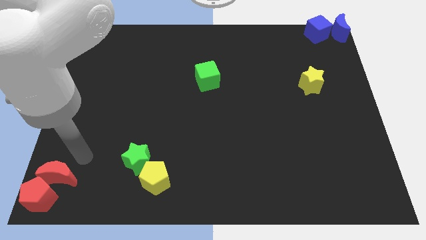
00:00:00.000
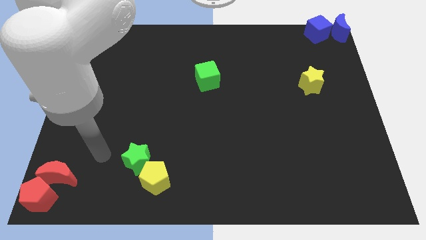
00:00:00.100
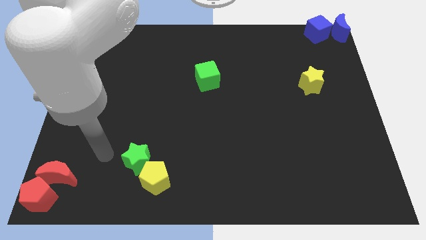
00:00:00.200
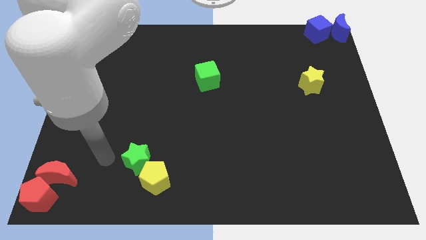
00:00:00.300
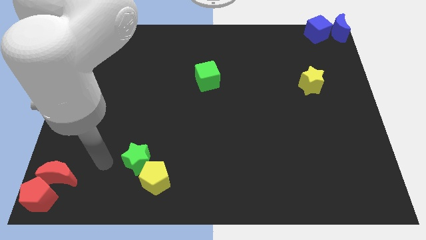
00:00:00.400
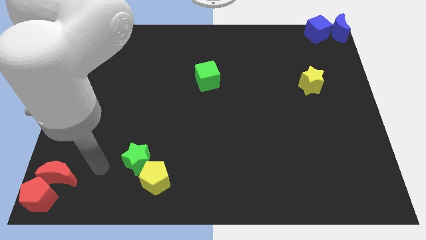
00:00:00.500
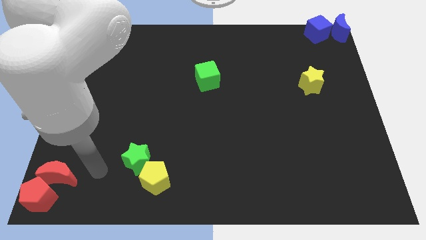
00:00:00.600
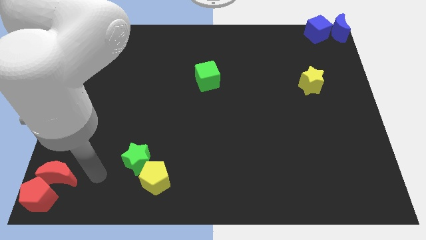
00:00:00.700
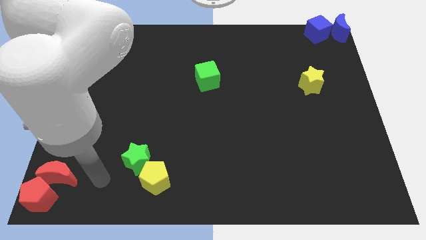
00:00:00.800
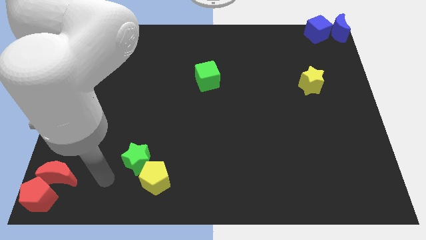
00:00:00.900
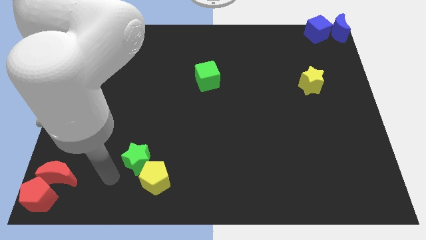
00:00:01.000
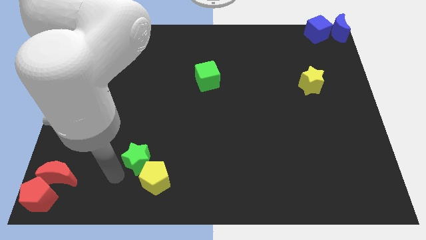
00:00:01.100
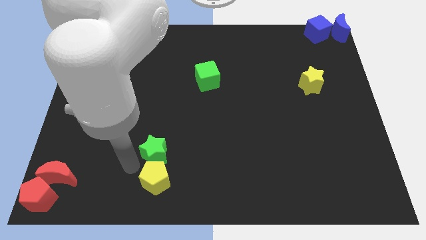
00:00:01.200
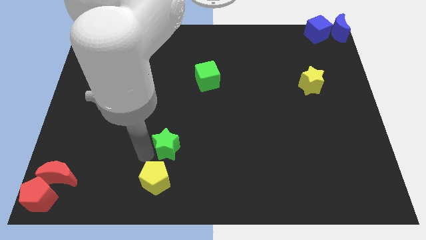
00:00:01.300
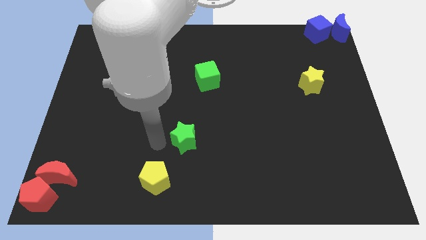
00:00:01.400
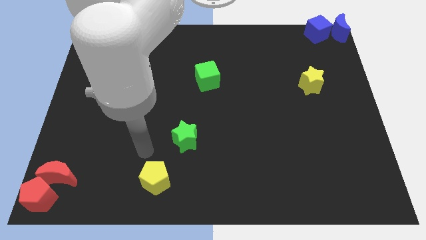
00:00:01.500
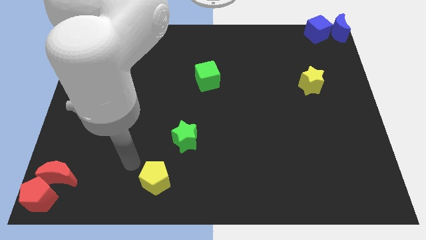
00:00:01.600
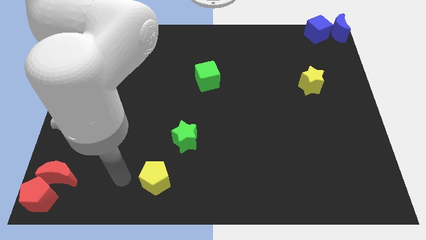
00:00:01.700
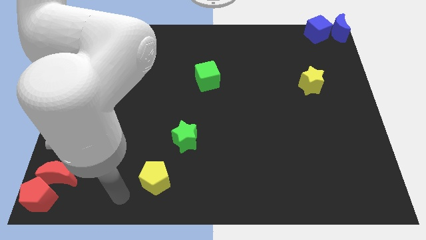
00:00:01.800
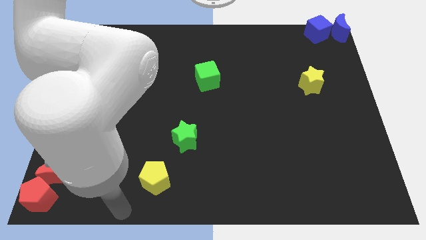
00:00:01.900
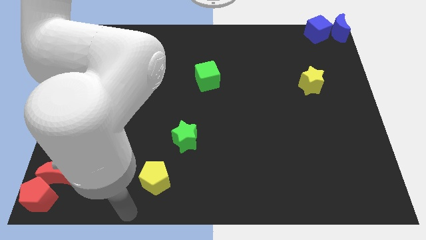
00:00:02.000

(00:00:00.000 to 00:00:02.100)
separate green star and yellow pentagon

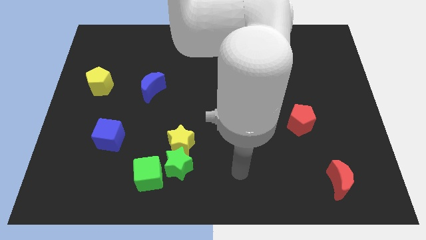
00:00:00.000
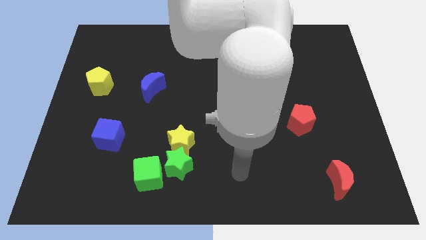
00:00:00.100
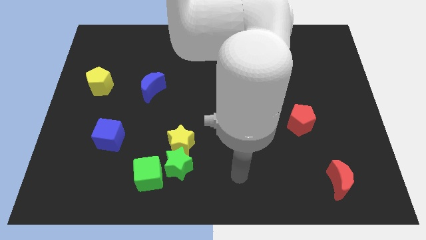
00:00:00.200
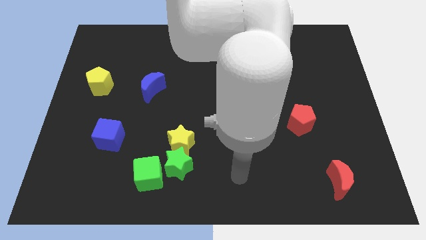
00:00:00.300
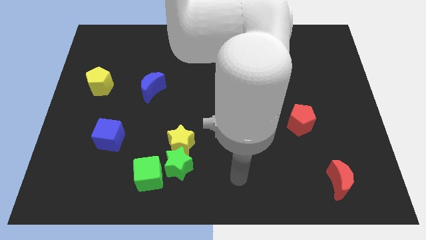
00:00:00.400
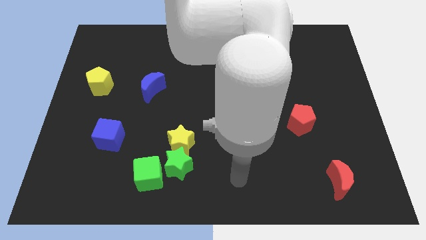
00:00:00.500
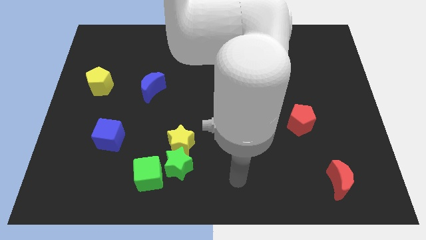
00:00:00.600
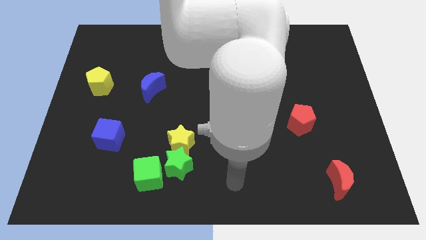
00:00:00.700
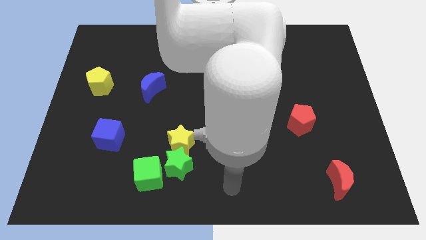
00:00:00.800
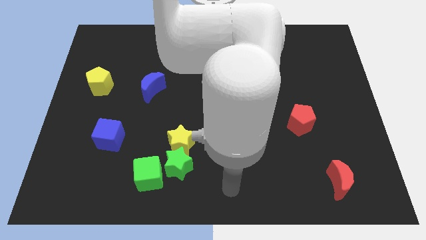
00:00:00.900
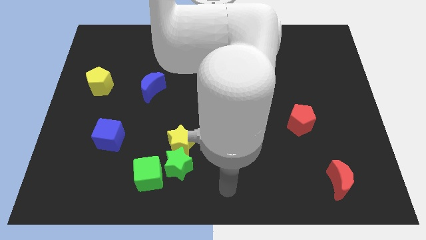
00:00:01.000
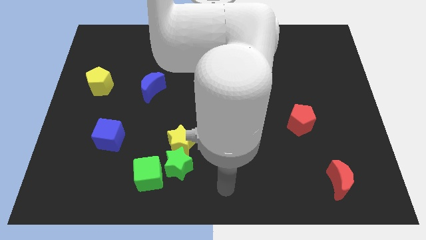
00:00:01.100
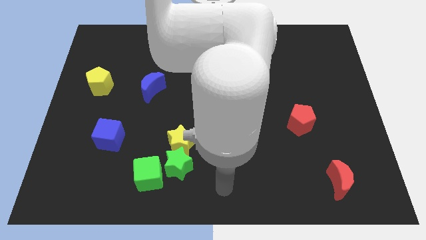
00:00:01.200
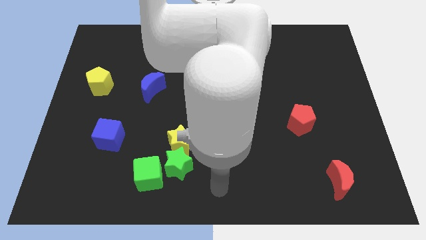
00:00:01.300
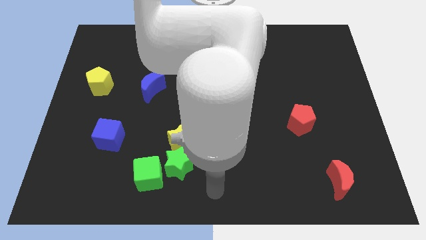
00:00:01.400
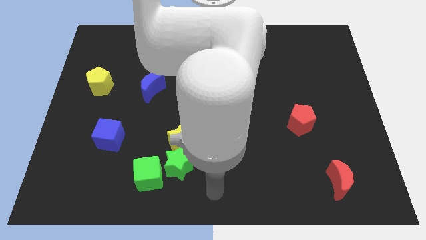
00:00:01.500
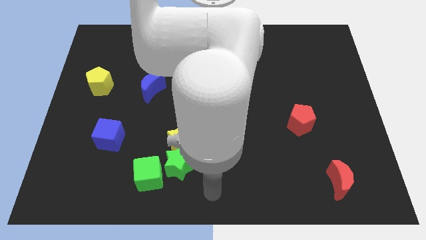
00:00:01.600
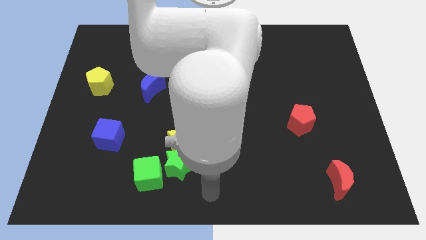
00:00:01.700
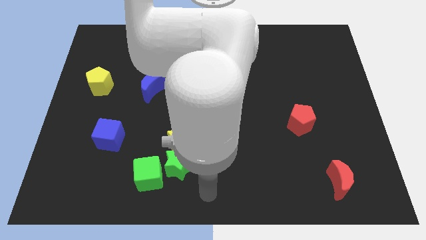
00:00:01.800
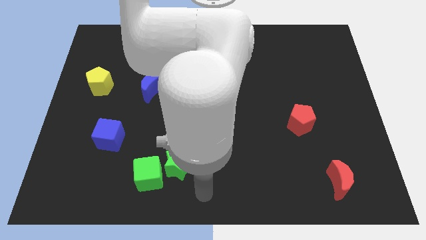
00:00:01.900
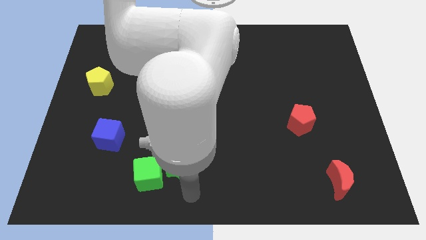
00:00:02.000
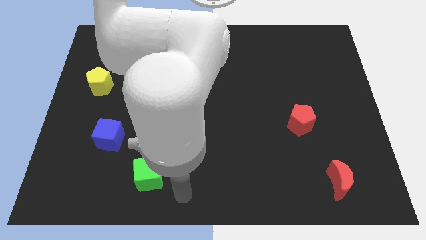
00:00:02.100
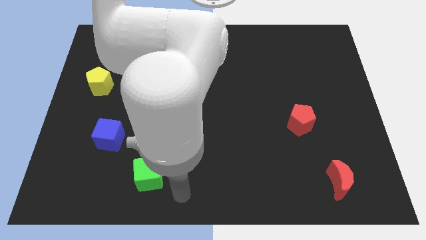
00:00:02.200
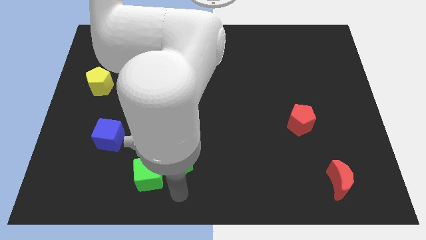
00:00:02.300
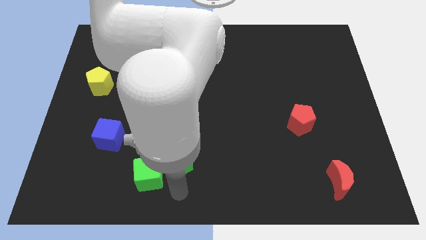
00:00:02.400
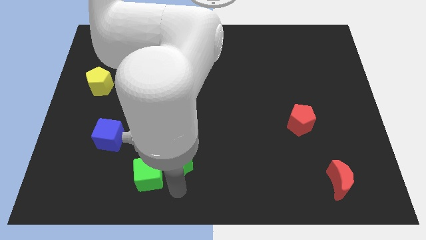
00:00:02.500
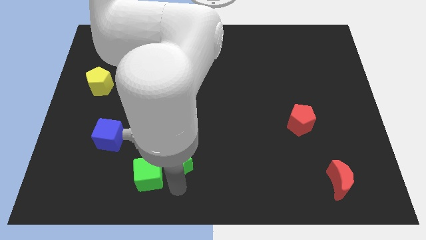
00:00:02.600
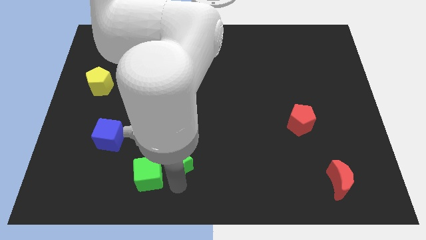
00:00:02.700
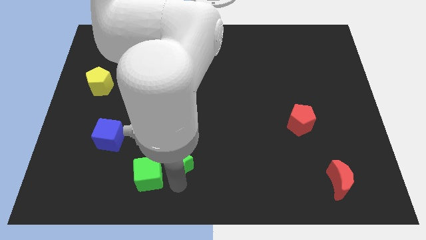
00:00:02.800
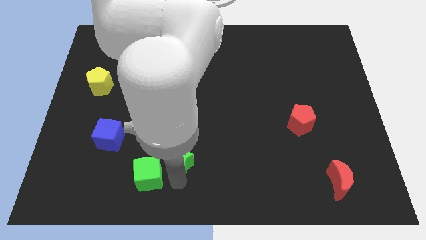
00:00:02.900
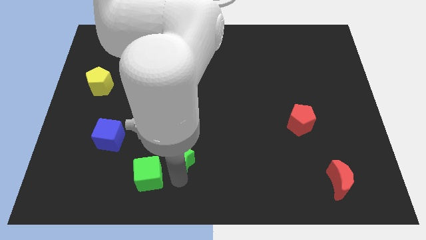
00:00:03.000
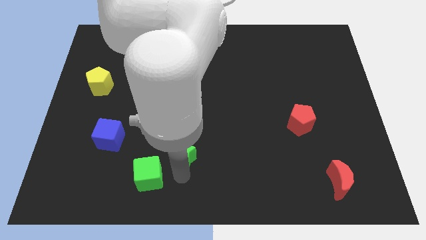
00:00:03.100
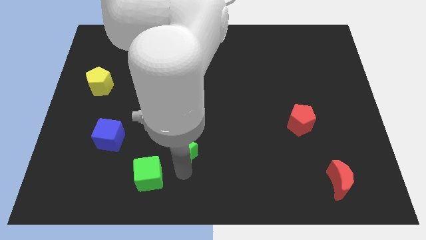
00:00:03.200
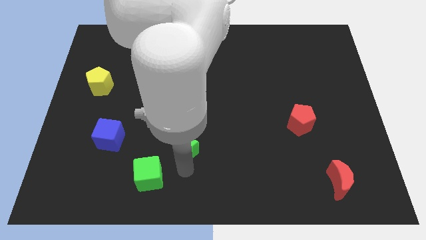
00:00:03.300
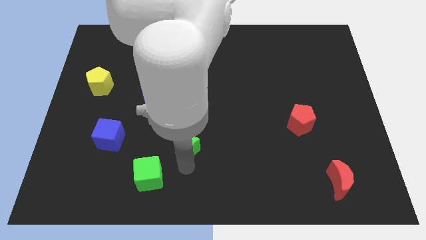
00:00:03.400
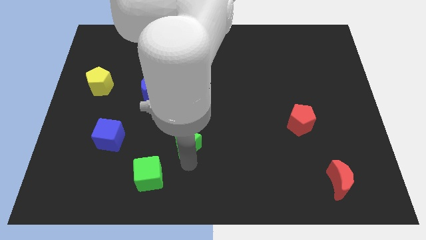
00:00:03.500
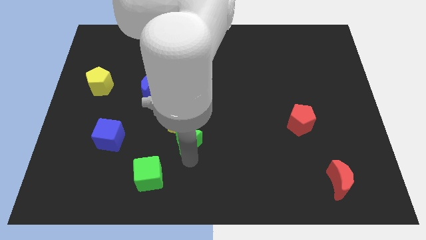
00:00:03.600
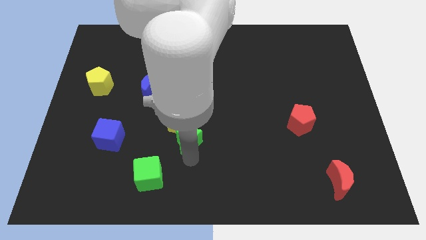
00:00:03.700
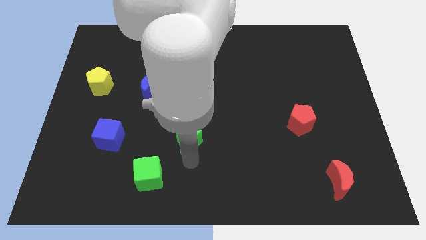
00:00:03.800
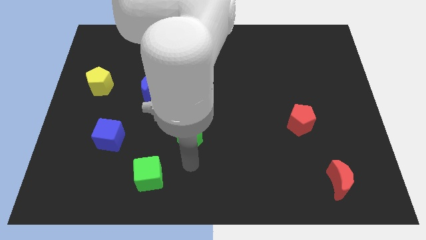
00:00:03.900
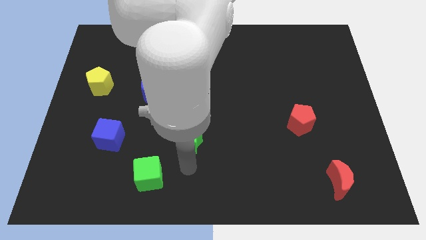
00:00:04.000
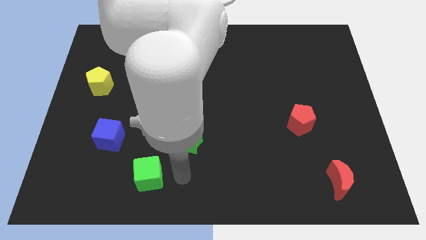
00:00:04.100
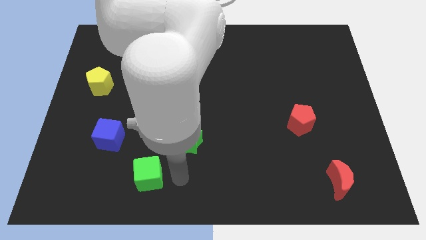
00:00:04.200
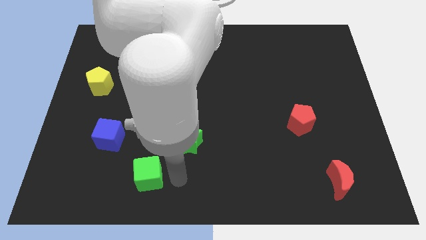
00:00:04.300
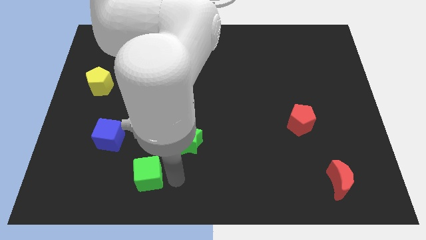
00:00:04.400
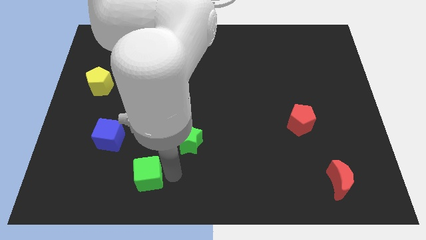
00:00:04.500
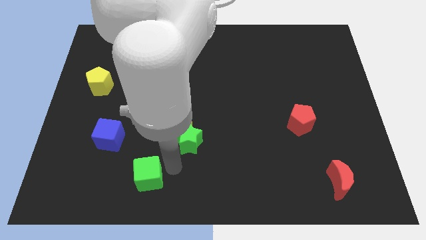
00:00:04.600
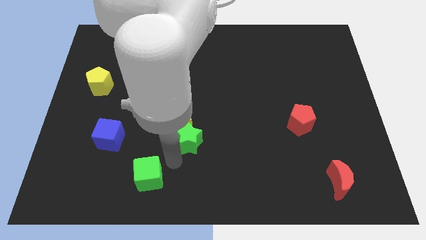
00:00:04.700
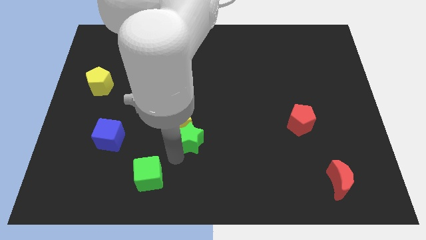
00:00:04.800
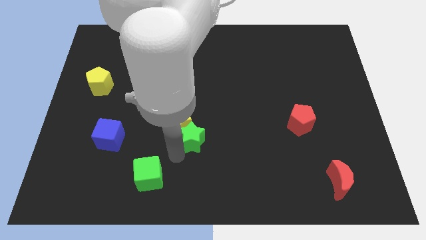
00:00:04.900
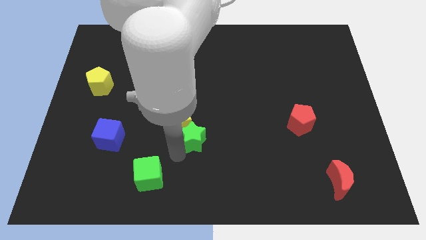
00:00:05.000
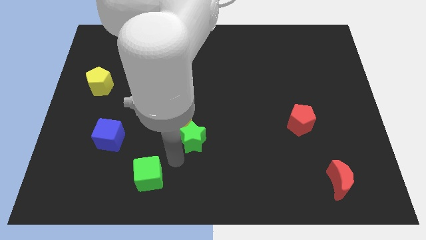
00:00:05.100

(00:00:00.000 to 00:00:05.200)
push the green star into the yellow star

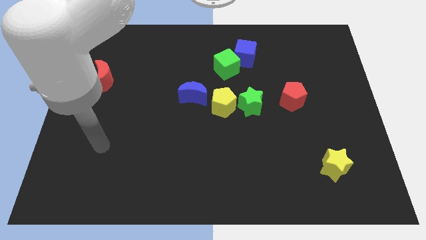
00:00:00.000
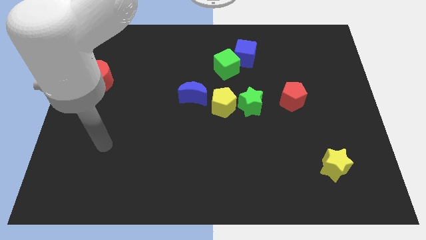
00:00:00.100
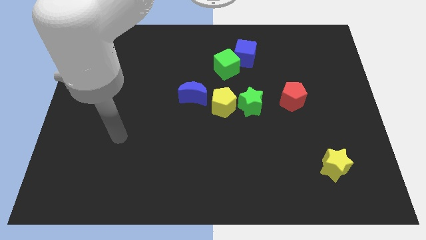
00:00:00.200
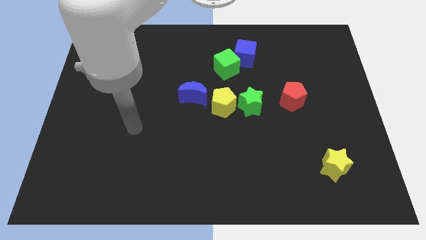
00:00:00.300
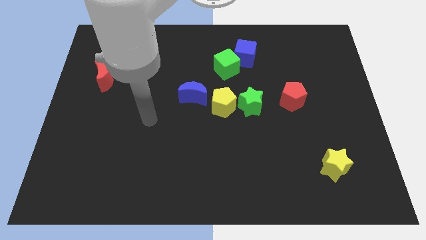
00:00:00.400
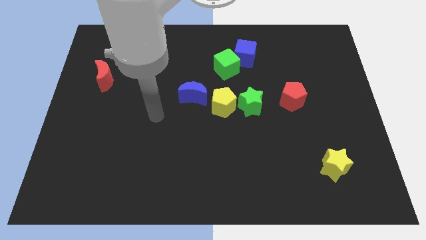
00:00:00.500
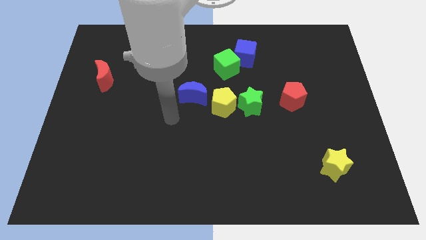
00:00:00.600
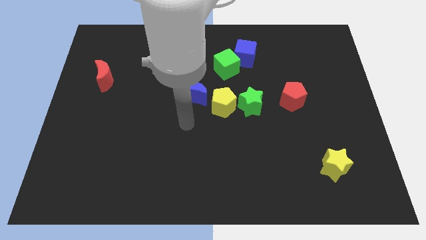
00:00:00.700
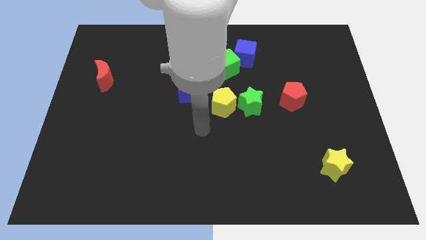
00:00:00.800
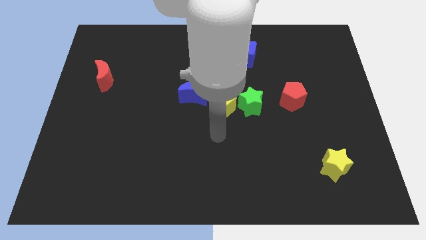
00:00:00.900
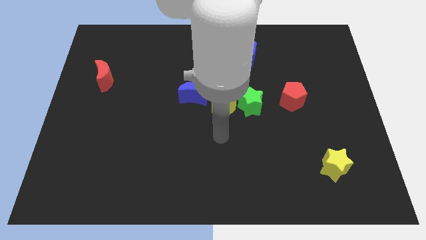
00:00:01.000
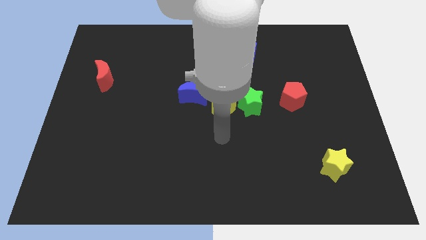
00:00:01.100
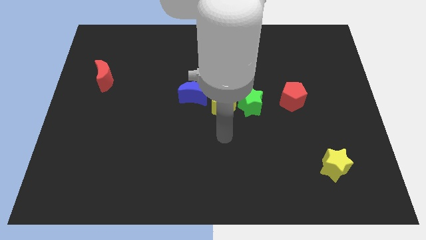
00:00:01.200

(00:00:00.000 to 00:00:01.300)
move your hand vertically below the yellow pentagon

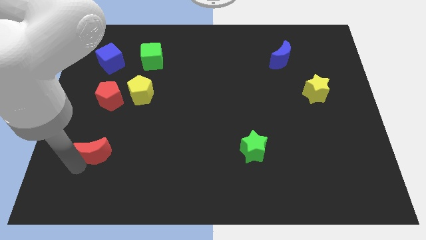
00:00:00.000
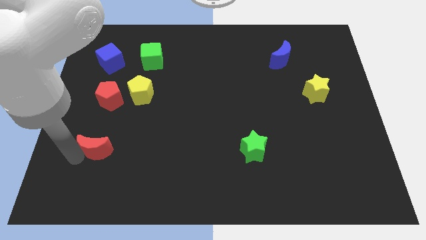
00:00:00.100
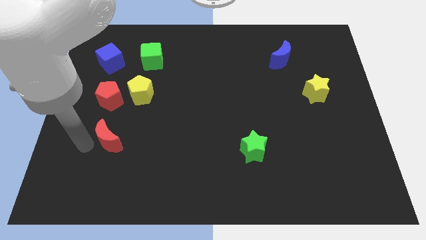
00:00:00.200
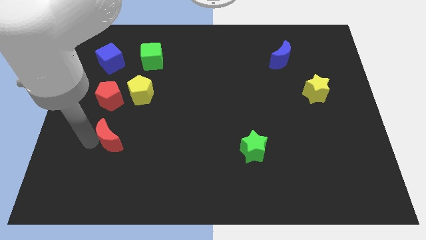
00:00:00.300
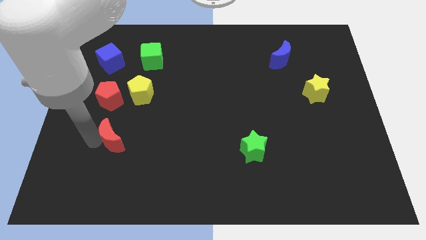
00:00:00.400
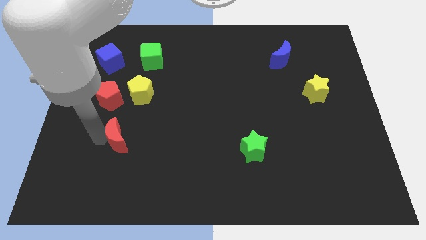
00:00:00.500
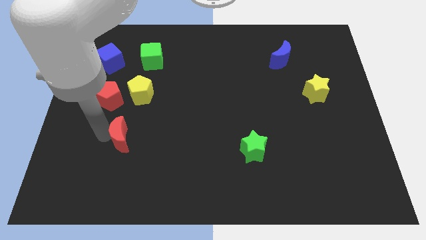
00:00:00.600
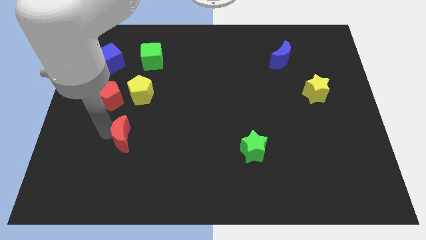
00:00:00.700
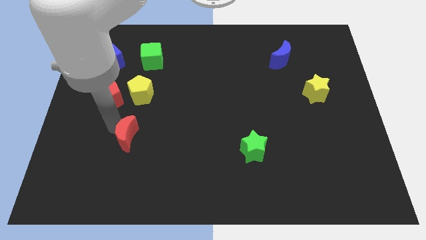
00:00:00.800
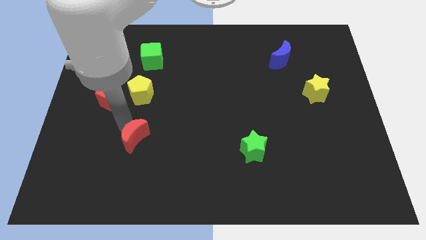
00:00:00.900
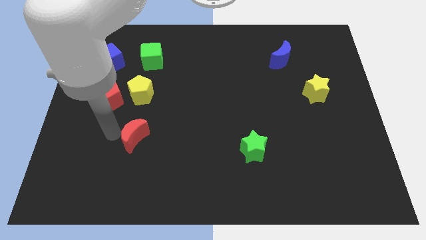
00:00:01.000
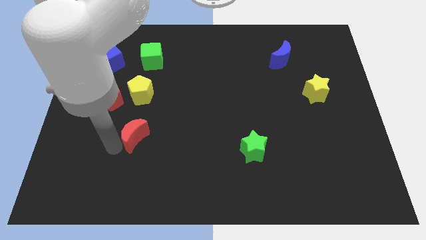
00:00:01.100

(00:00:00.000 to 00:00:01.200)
put the red moon vertically below the yellow pentagon
